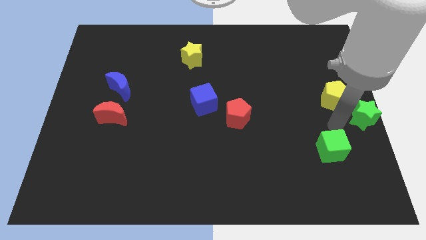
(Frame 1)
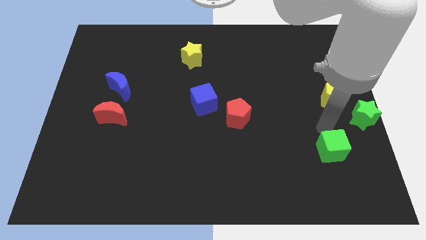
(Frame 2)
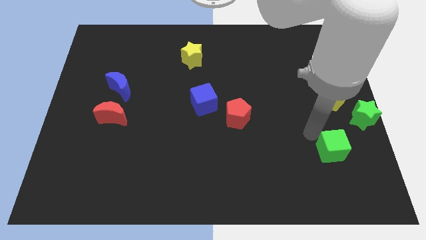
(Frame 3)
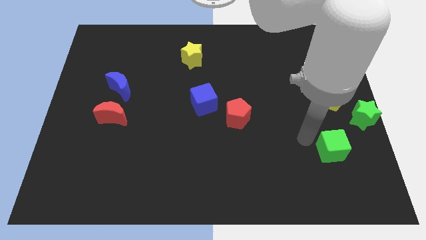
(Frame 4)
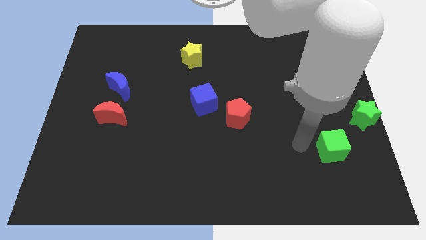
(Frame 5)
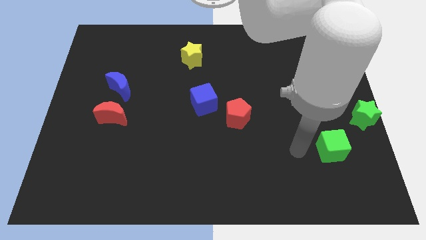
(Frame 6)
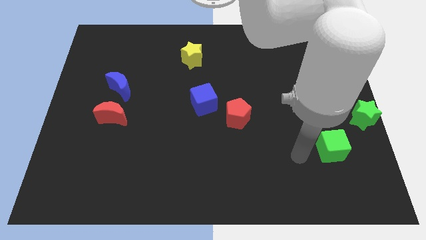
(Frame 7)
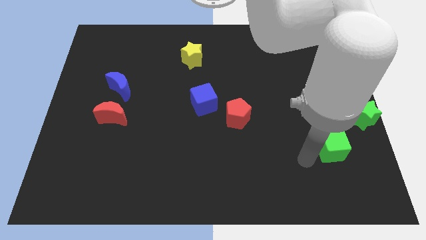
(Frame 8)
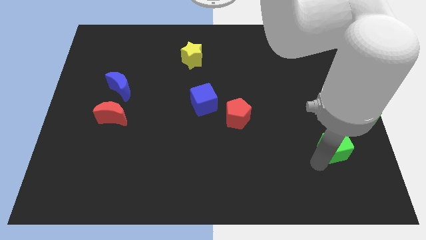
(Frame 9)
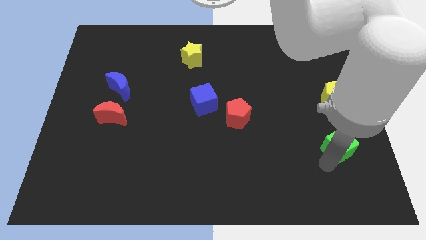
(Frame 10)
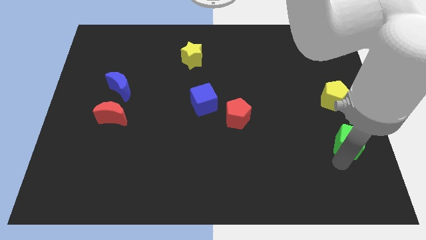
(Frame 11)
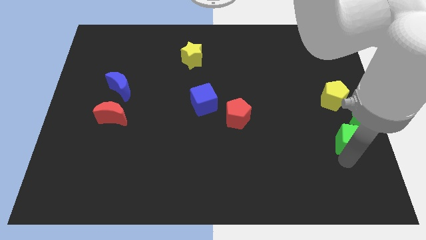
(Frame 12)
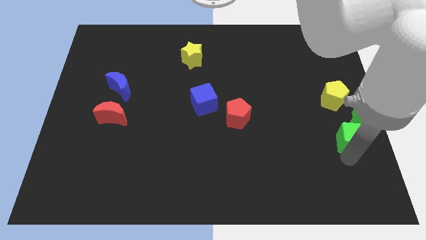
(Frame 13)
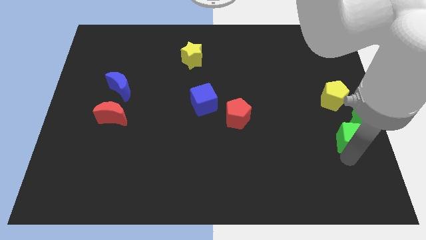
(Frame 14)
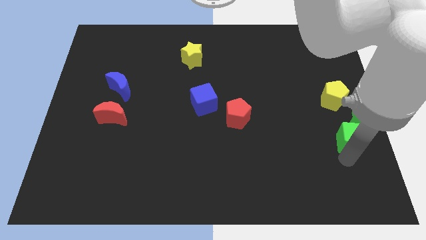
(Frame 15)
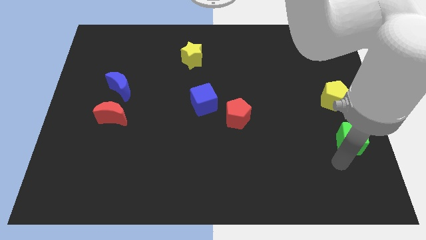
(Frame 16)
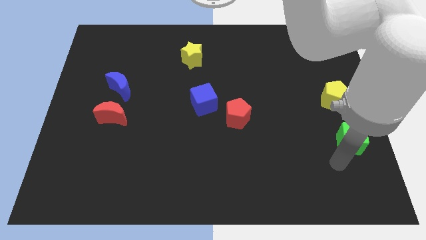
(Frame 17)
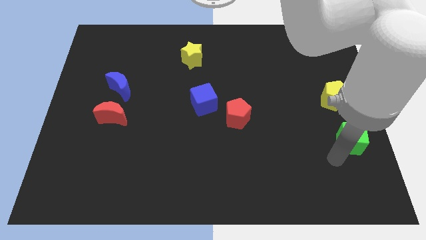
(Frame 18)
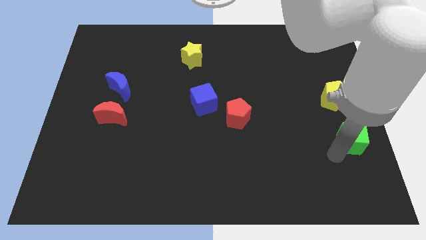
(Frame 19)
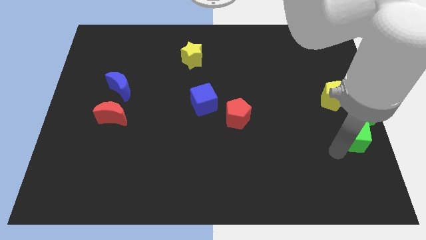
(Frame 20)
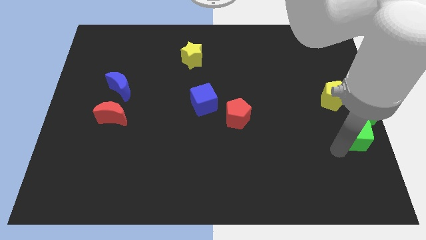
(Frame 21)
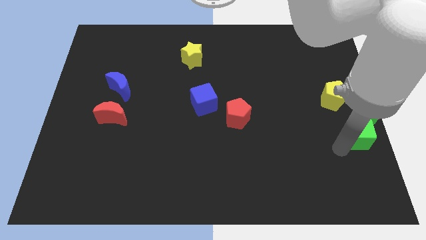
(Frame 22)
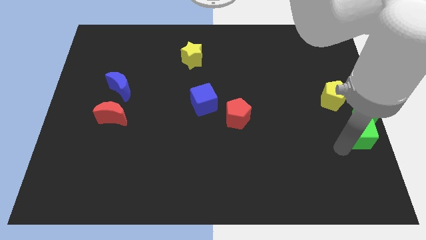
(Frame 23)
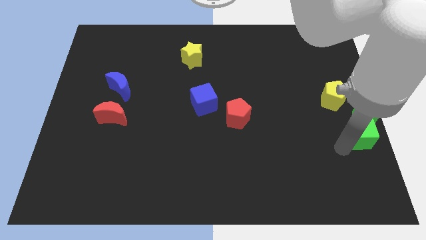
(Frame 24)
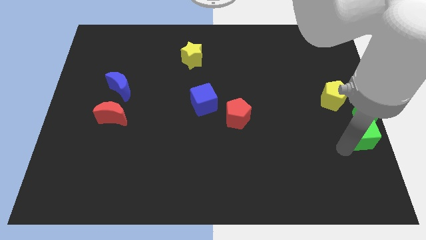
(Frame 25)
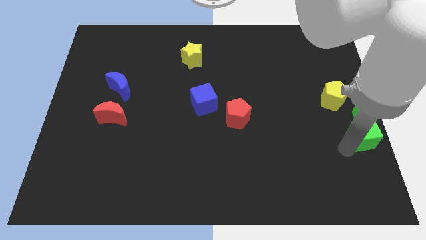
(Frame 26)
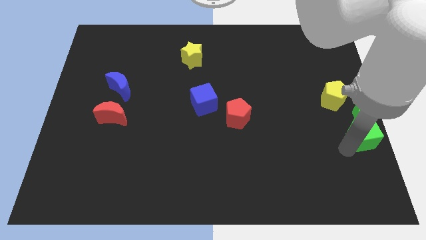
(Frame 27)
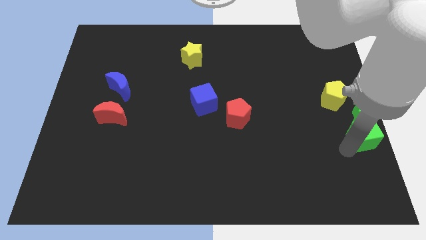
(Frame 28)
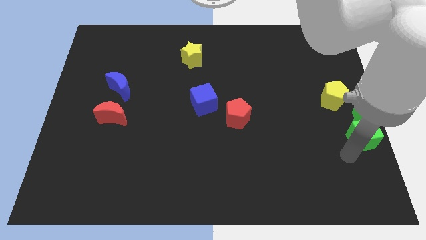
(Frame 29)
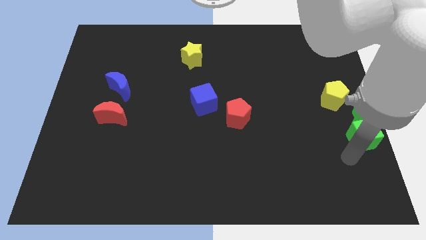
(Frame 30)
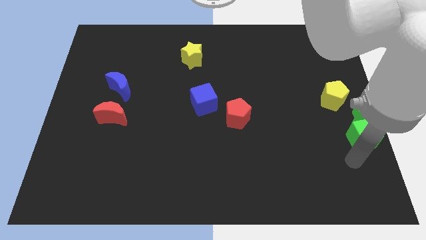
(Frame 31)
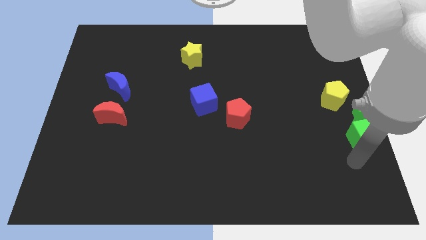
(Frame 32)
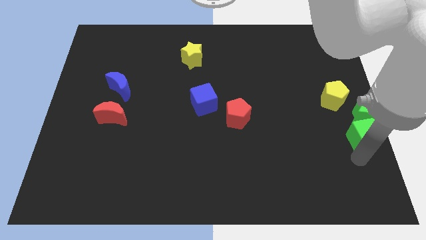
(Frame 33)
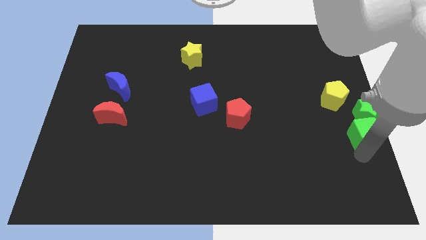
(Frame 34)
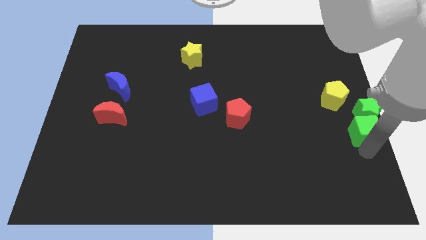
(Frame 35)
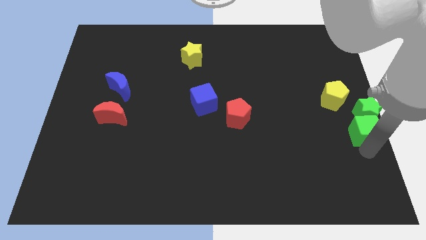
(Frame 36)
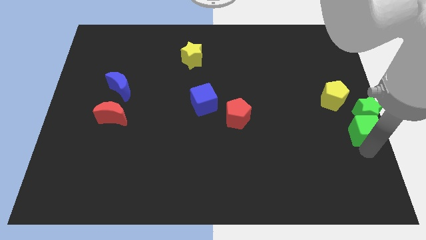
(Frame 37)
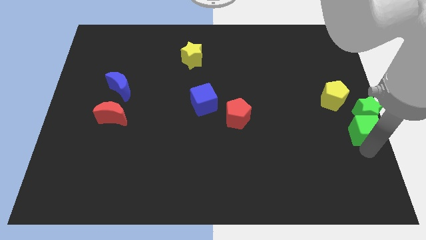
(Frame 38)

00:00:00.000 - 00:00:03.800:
move the green cube to the bottom side of the green star

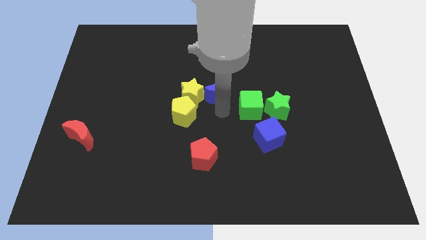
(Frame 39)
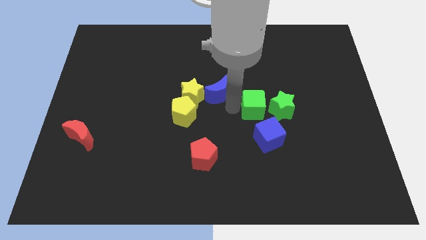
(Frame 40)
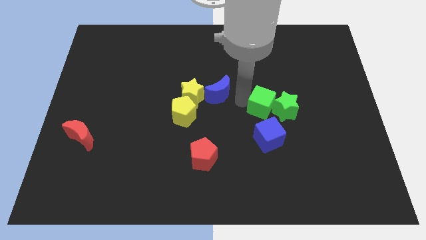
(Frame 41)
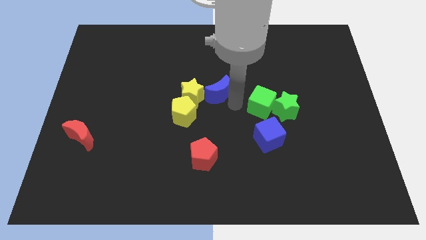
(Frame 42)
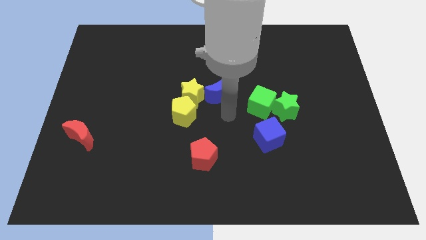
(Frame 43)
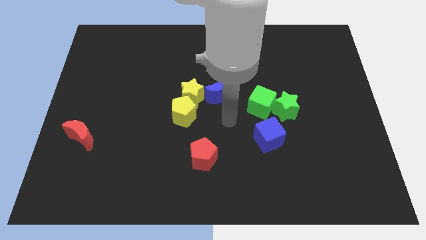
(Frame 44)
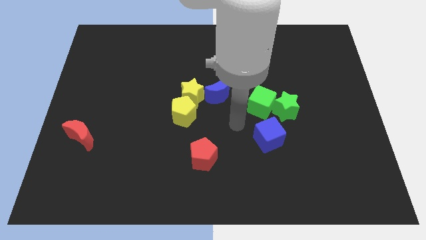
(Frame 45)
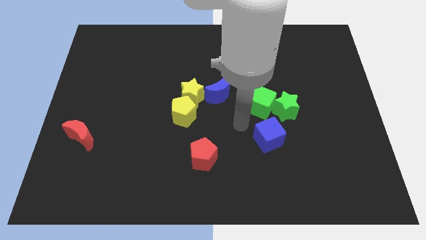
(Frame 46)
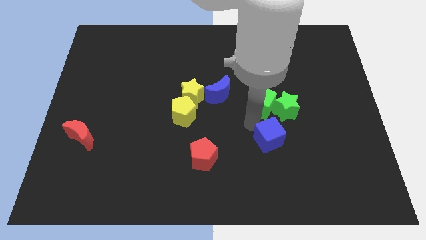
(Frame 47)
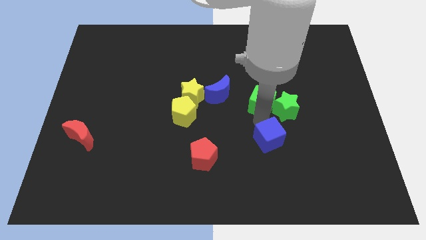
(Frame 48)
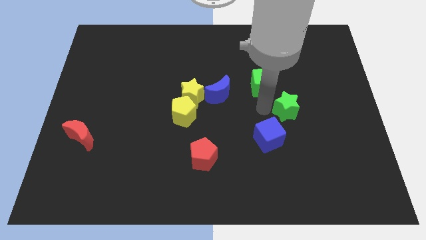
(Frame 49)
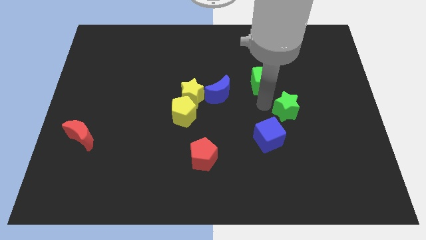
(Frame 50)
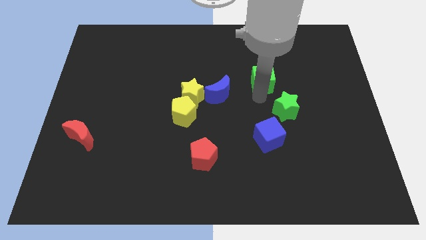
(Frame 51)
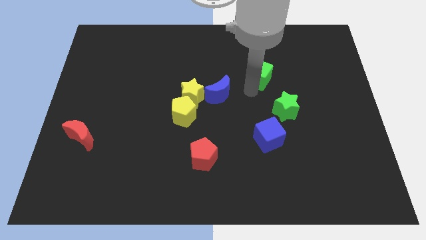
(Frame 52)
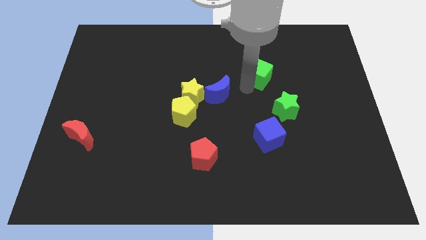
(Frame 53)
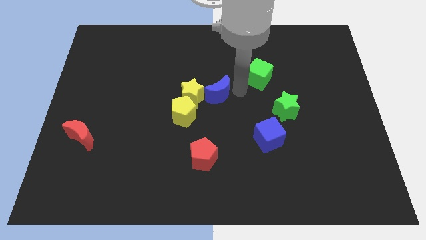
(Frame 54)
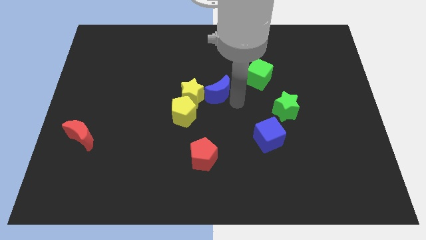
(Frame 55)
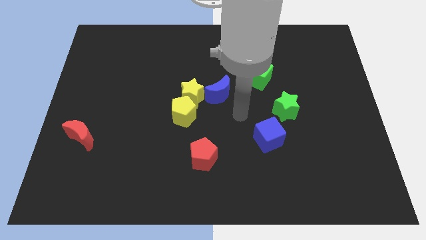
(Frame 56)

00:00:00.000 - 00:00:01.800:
push the green star to the top right of the blue crescent

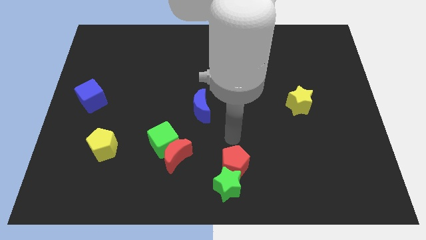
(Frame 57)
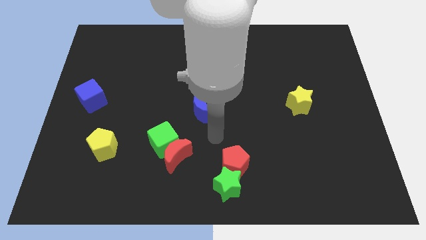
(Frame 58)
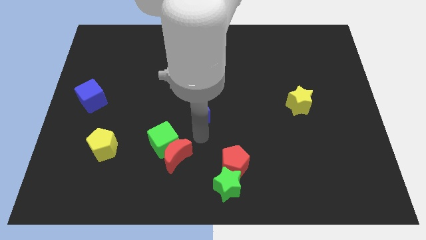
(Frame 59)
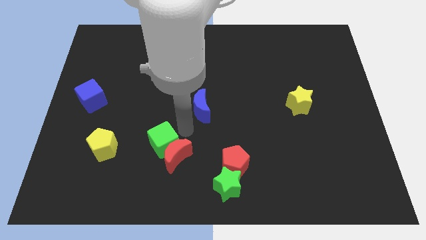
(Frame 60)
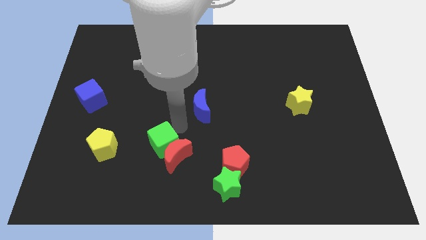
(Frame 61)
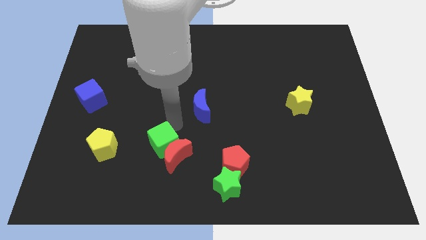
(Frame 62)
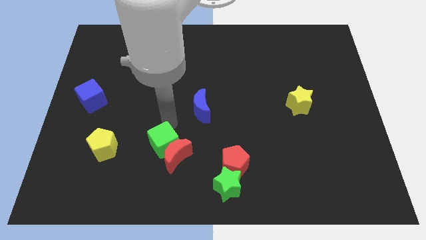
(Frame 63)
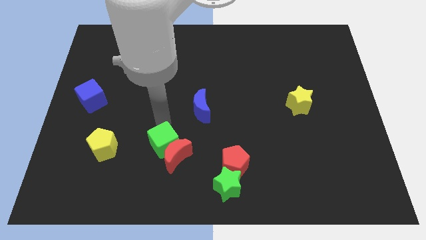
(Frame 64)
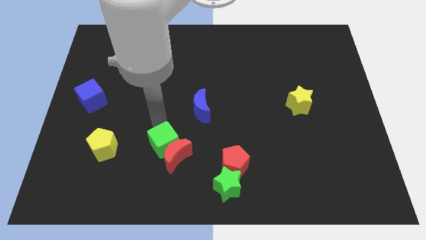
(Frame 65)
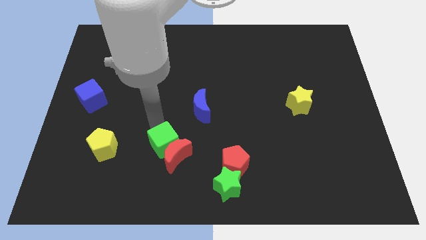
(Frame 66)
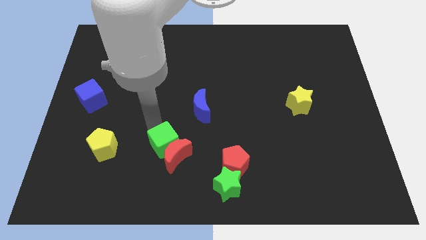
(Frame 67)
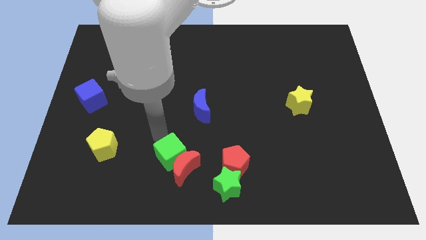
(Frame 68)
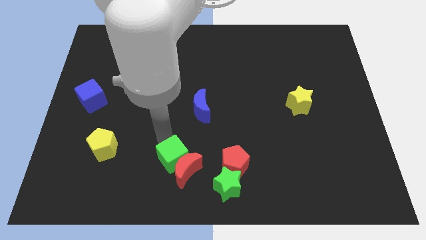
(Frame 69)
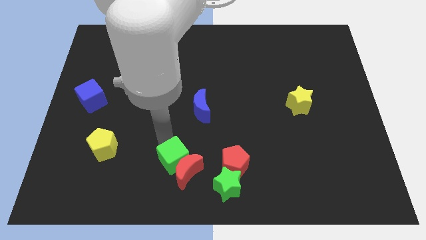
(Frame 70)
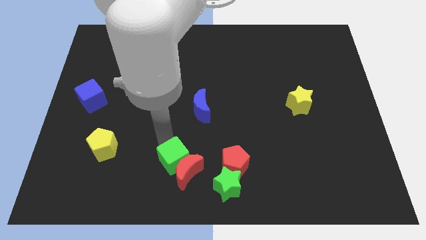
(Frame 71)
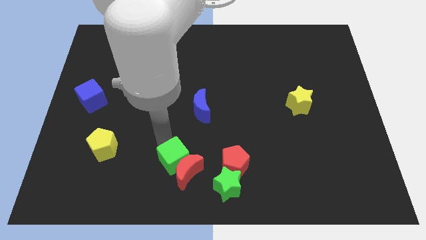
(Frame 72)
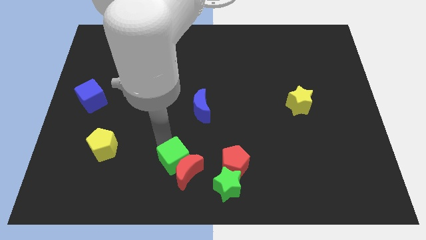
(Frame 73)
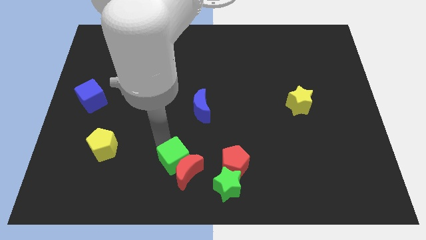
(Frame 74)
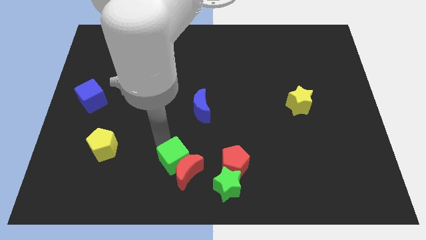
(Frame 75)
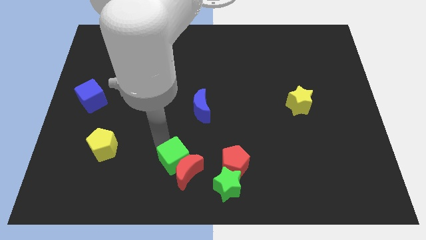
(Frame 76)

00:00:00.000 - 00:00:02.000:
push the green cube and red moon towards the bottom center of the board

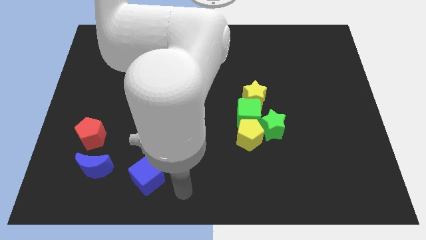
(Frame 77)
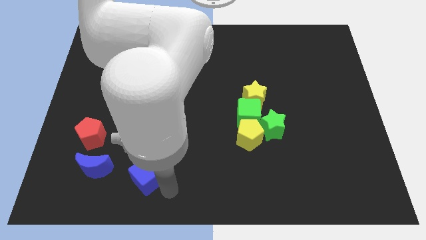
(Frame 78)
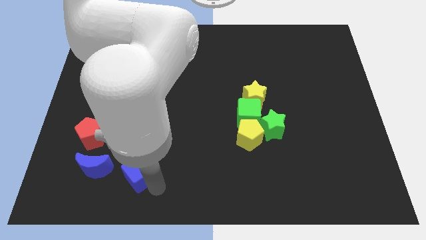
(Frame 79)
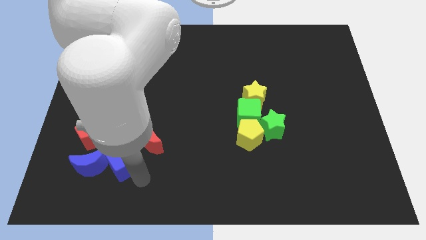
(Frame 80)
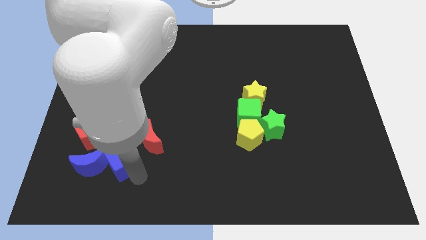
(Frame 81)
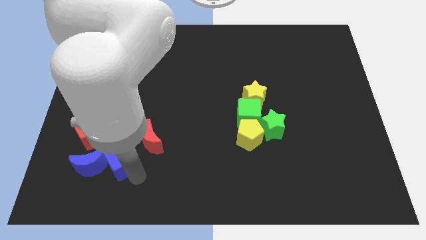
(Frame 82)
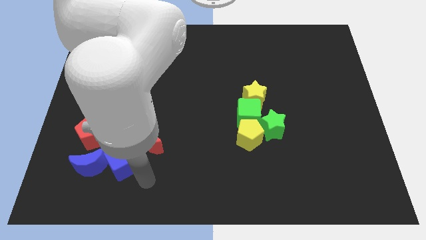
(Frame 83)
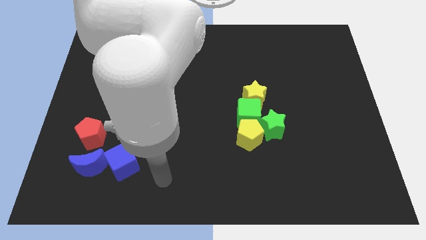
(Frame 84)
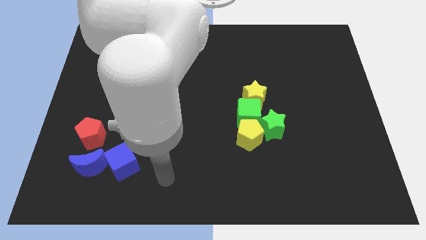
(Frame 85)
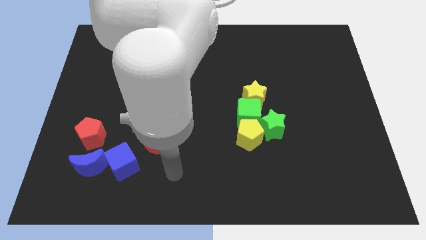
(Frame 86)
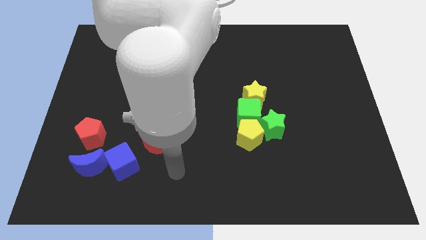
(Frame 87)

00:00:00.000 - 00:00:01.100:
push blue cube into blue moon

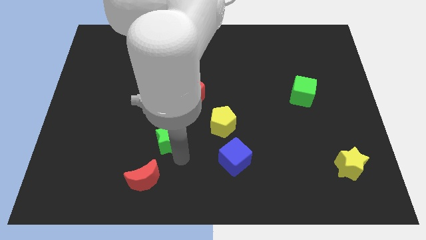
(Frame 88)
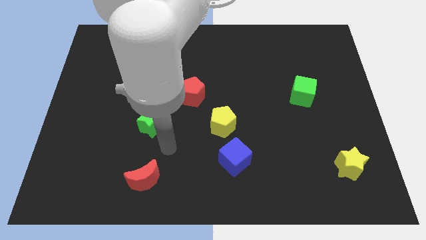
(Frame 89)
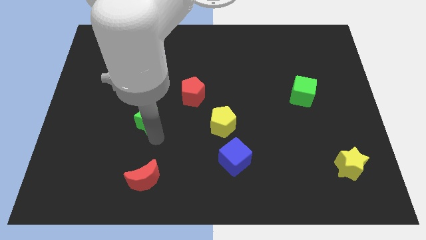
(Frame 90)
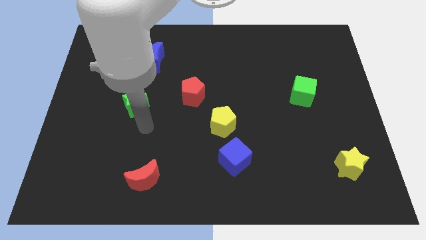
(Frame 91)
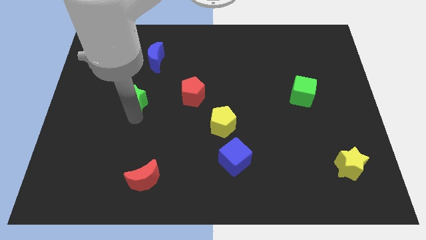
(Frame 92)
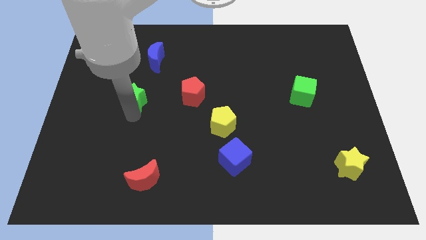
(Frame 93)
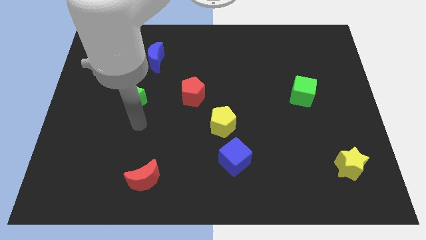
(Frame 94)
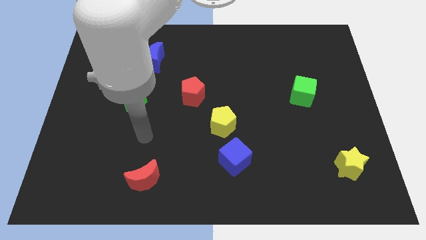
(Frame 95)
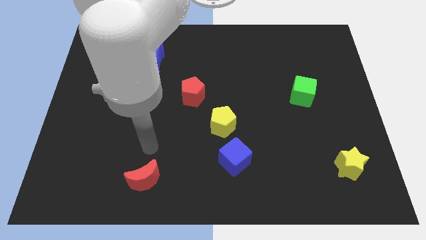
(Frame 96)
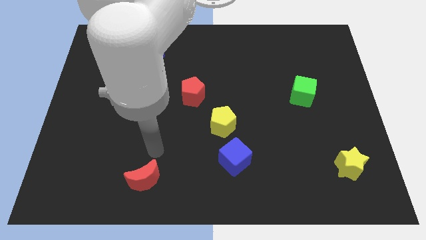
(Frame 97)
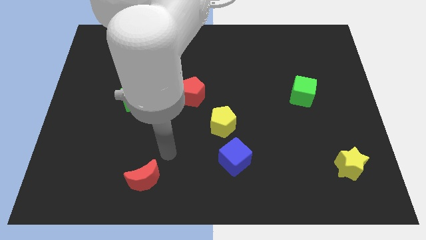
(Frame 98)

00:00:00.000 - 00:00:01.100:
push green star towards center left
